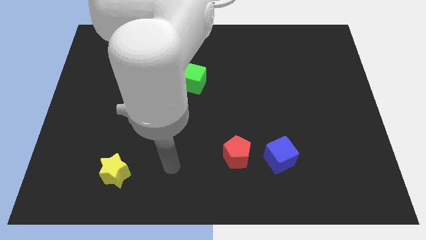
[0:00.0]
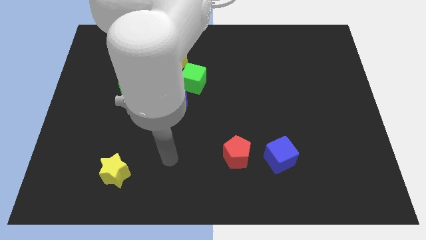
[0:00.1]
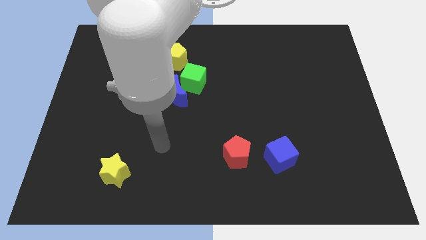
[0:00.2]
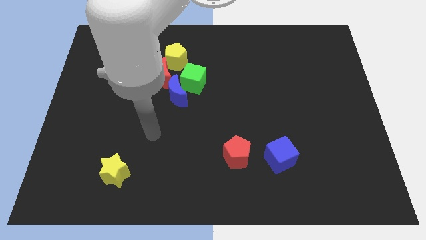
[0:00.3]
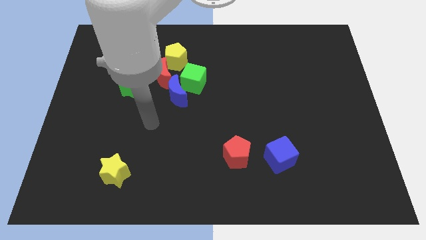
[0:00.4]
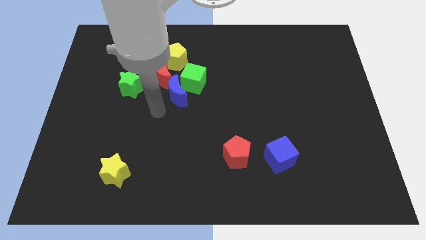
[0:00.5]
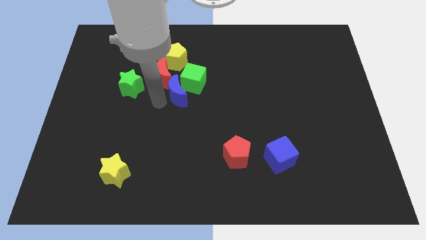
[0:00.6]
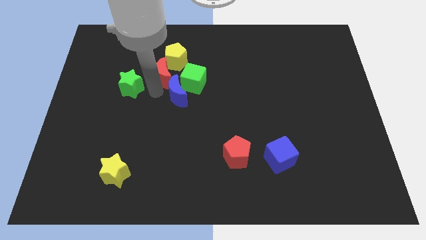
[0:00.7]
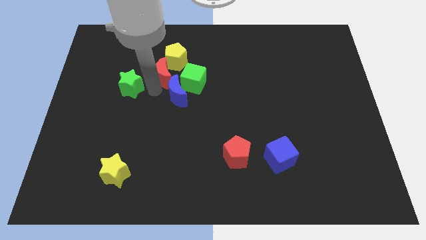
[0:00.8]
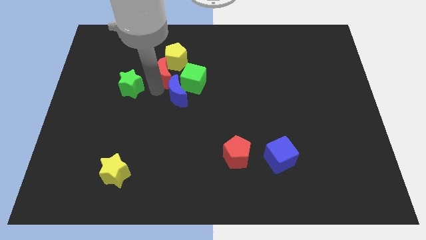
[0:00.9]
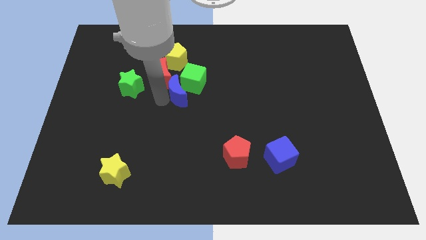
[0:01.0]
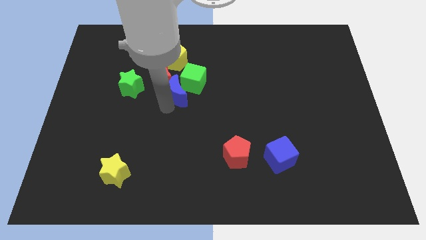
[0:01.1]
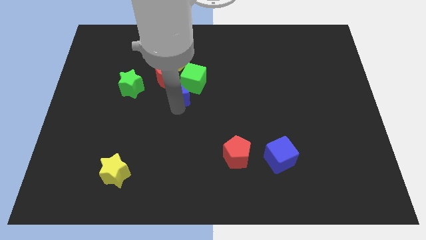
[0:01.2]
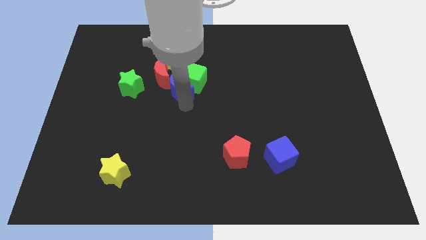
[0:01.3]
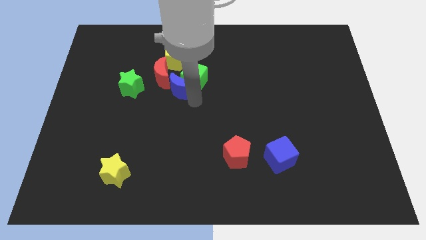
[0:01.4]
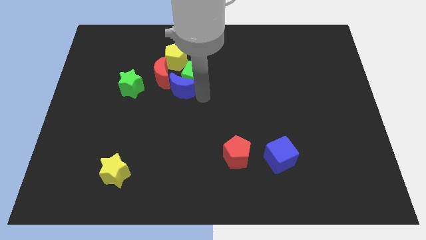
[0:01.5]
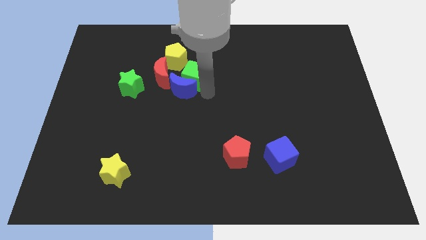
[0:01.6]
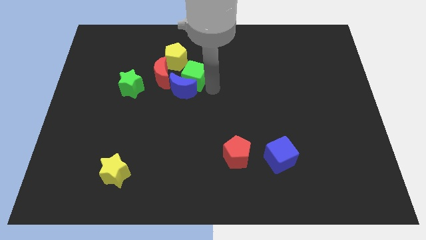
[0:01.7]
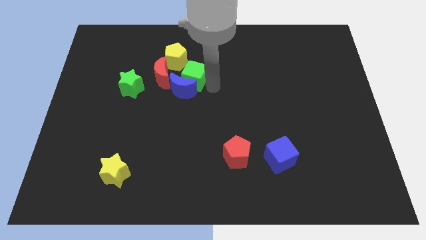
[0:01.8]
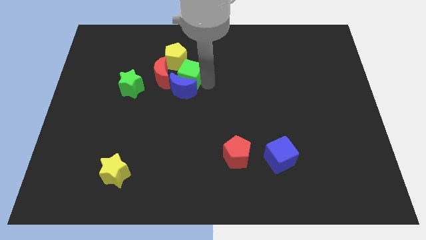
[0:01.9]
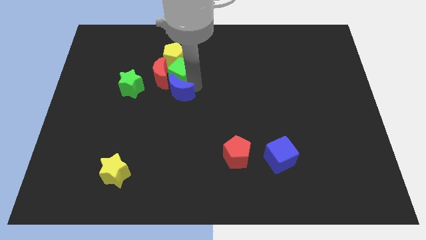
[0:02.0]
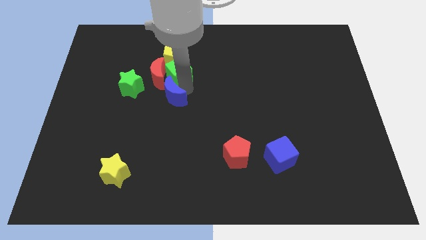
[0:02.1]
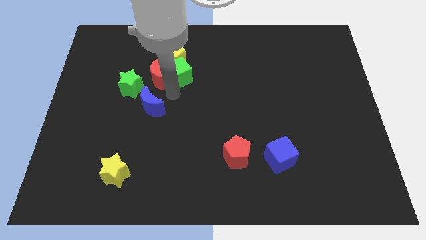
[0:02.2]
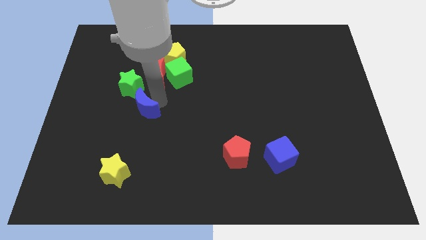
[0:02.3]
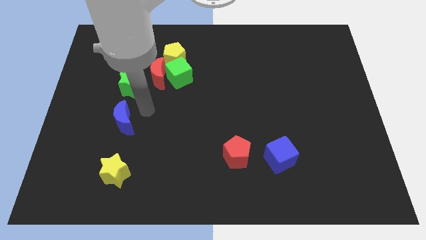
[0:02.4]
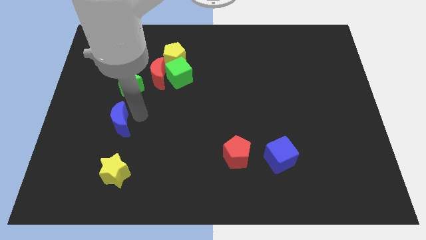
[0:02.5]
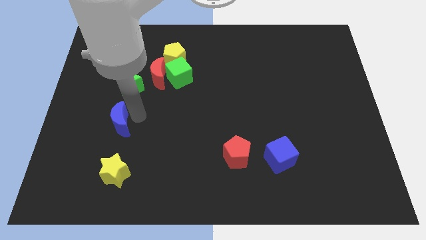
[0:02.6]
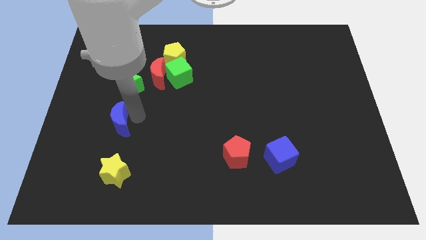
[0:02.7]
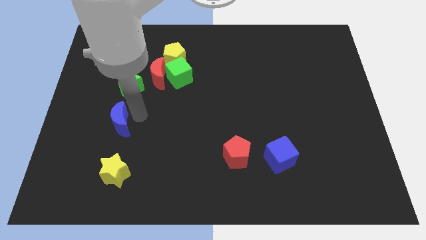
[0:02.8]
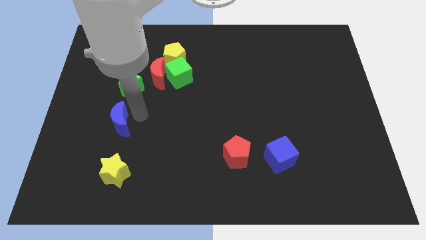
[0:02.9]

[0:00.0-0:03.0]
move blue moon between green star and yellow star

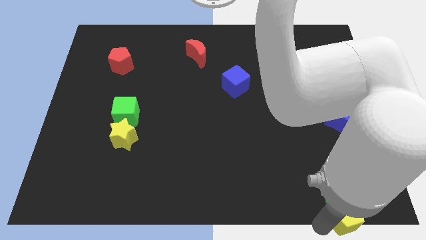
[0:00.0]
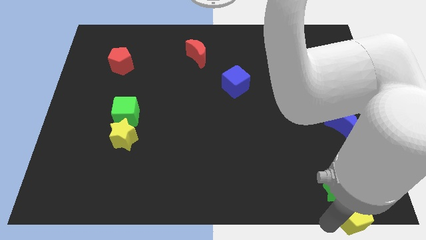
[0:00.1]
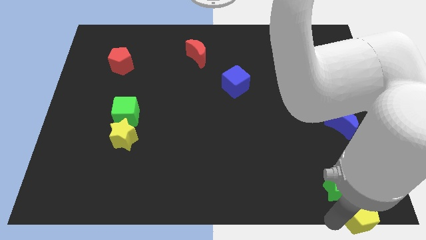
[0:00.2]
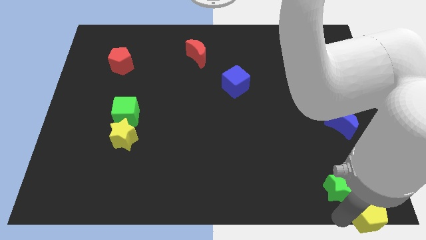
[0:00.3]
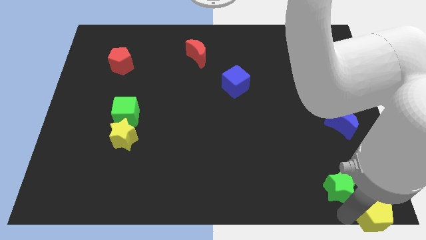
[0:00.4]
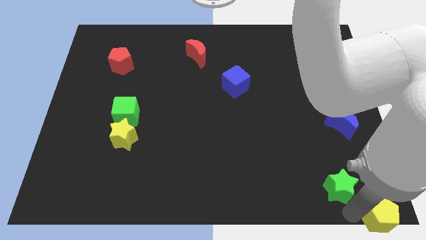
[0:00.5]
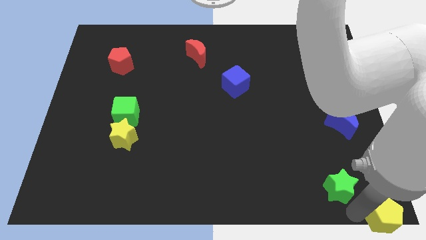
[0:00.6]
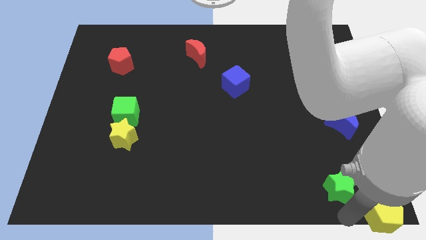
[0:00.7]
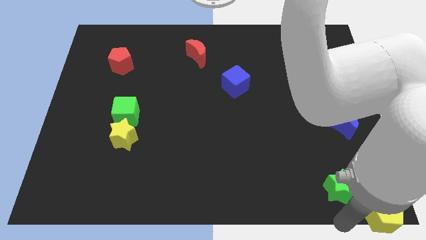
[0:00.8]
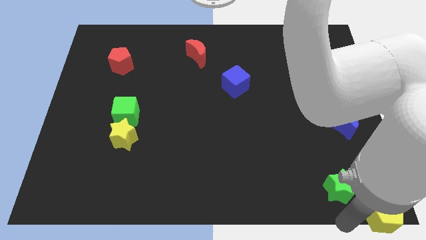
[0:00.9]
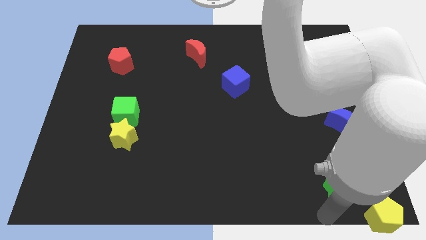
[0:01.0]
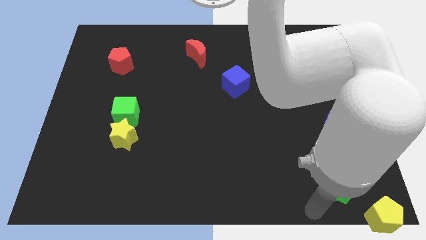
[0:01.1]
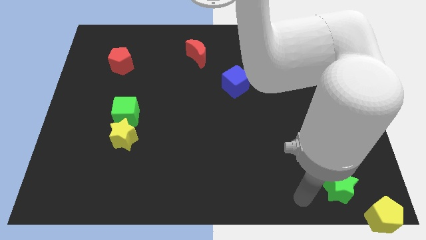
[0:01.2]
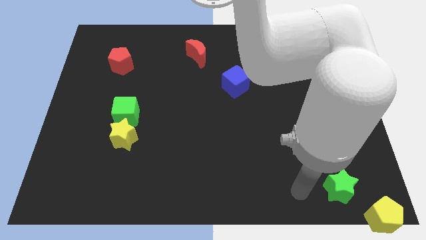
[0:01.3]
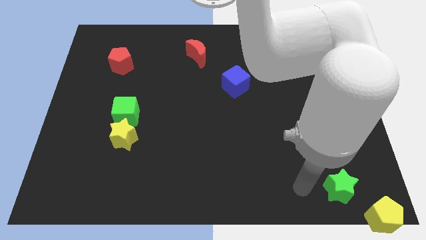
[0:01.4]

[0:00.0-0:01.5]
push yellow pentagon to the bottom right corner of the board

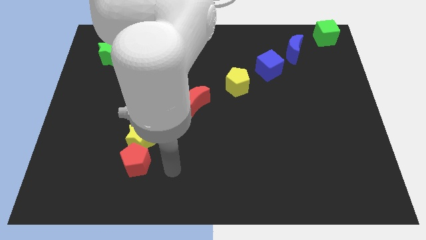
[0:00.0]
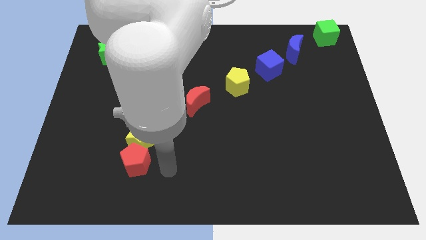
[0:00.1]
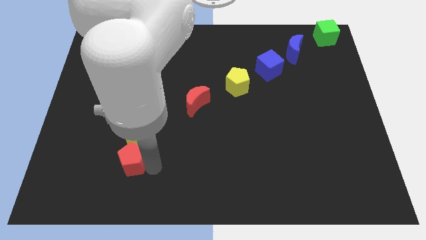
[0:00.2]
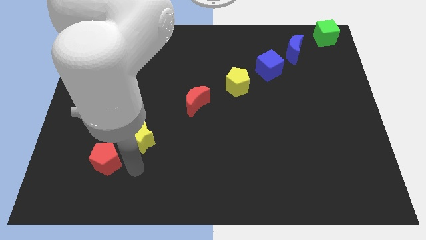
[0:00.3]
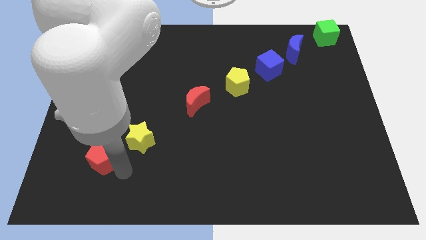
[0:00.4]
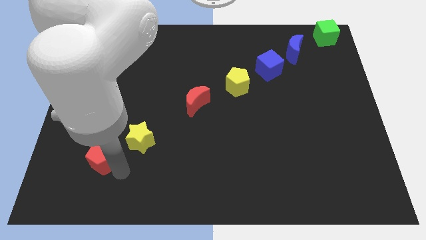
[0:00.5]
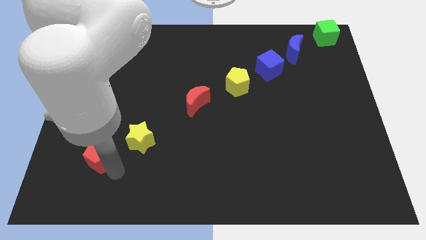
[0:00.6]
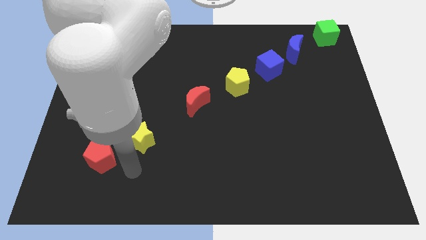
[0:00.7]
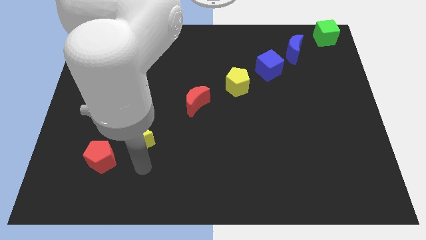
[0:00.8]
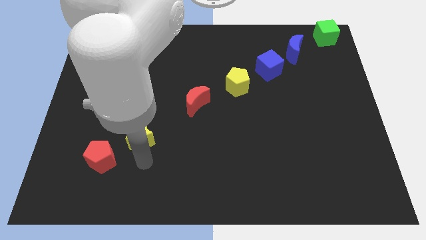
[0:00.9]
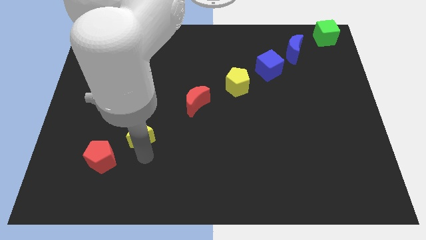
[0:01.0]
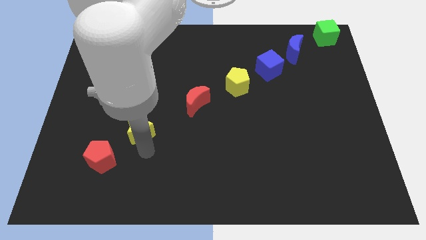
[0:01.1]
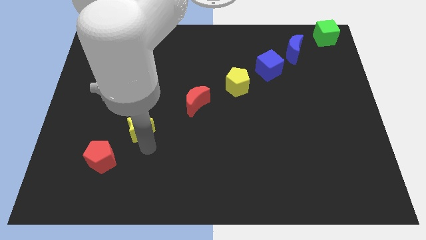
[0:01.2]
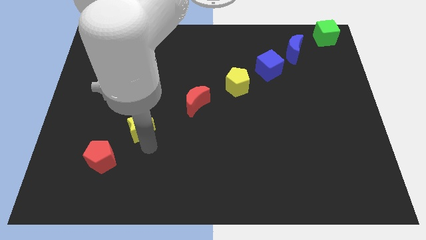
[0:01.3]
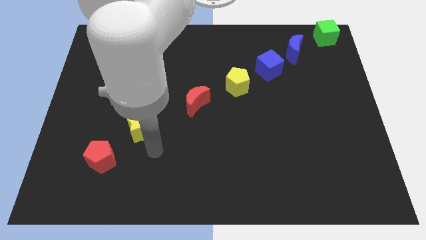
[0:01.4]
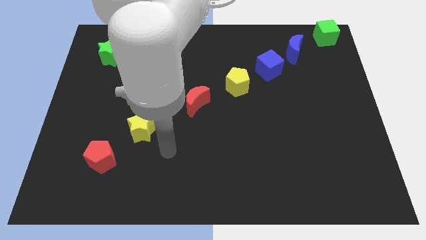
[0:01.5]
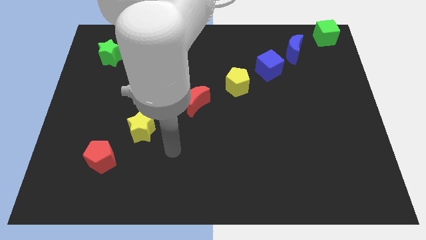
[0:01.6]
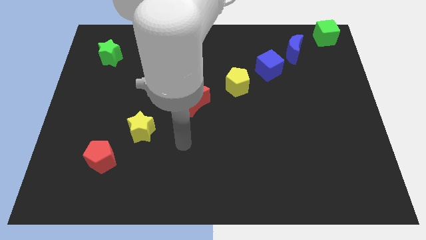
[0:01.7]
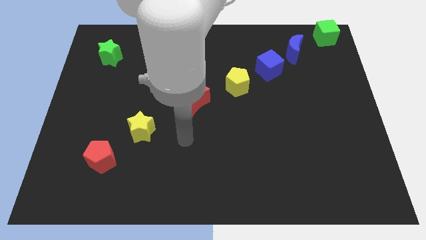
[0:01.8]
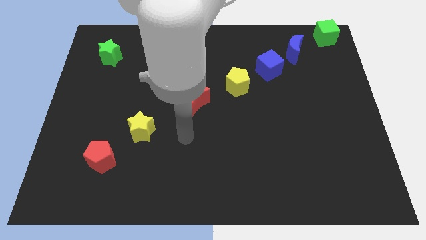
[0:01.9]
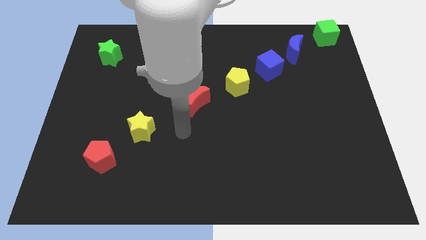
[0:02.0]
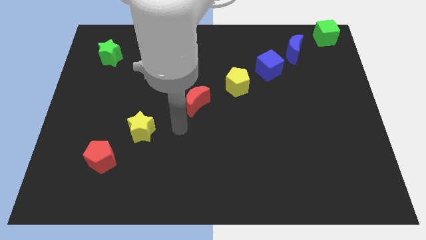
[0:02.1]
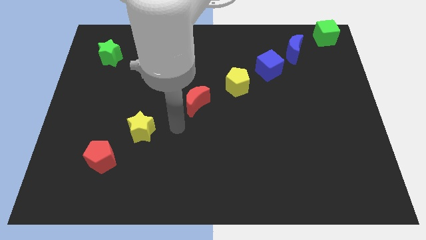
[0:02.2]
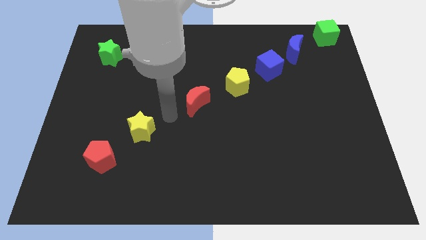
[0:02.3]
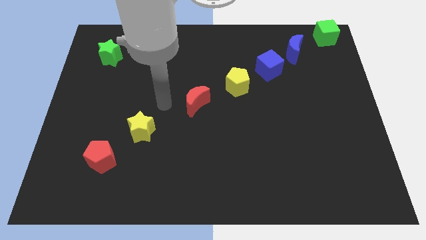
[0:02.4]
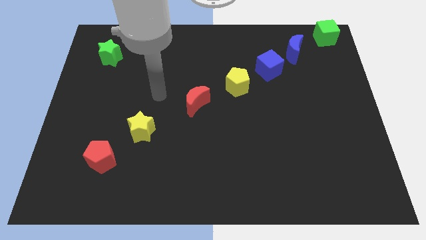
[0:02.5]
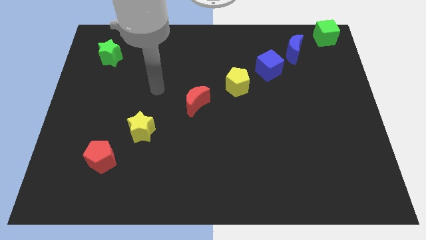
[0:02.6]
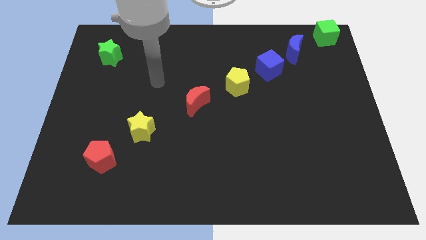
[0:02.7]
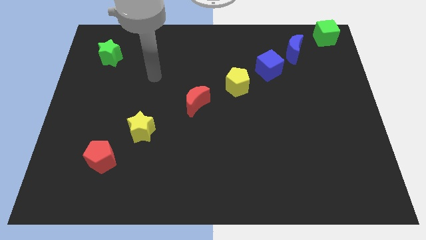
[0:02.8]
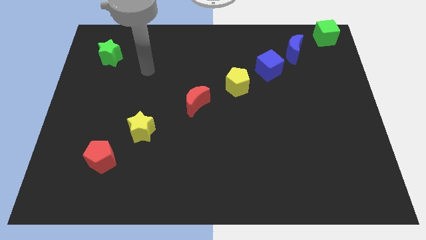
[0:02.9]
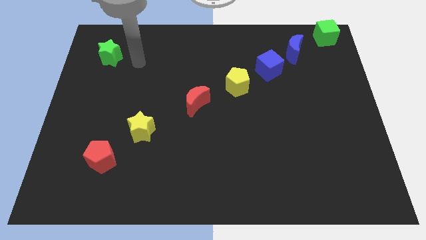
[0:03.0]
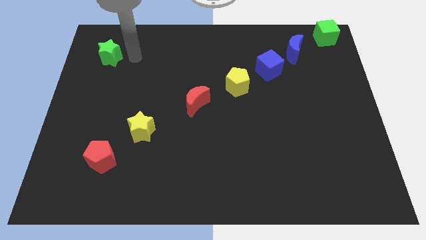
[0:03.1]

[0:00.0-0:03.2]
put the yellow star and red pentagon diagonally on the bottom left side of the red crescent

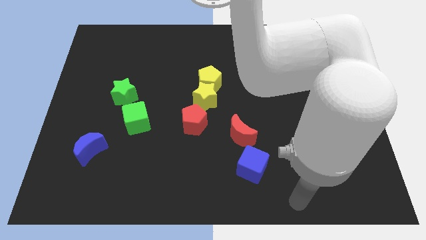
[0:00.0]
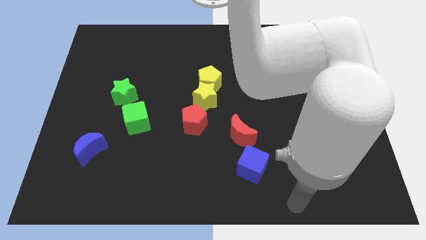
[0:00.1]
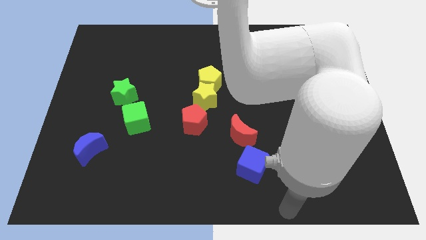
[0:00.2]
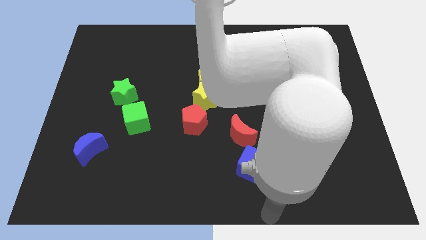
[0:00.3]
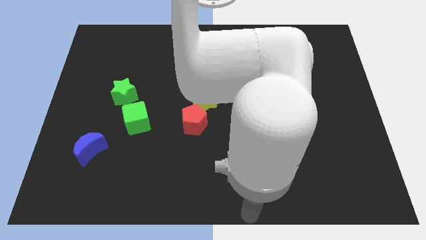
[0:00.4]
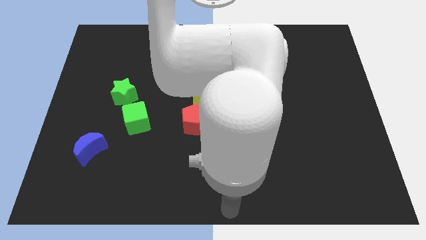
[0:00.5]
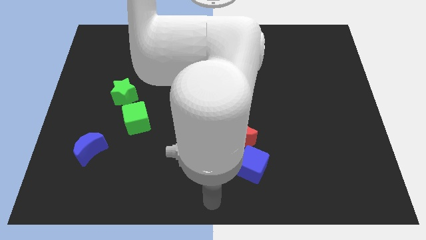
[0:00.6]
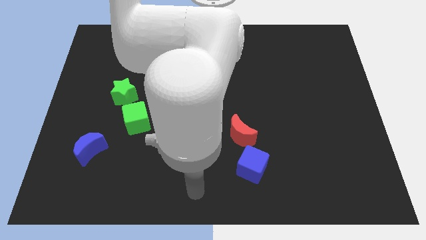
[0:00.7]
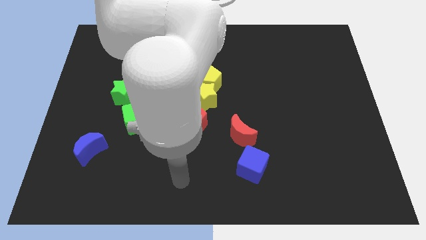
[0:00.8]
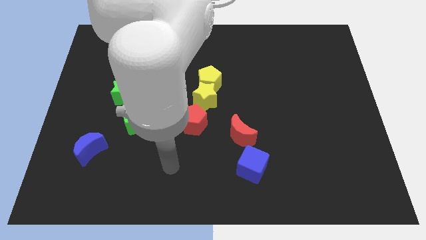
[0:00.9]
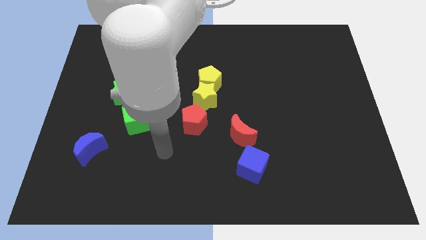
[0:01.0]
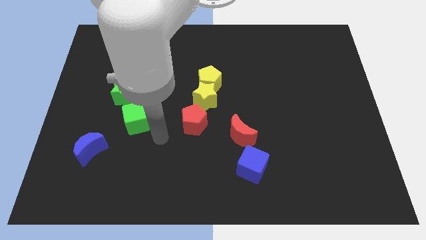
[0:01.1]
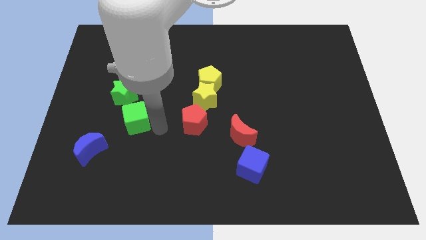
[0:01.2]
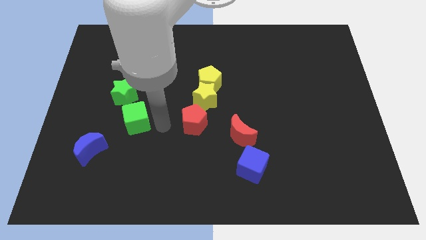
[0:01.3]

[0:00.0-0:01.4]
place your arm at the right of green cube

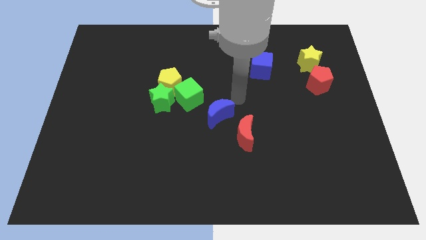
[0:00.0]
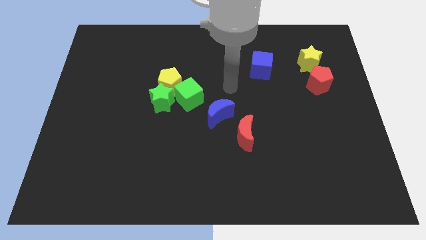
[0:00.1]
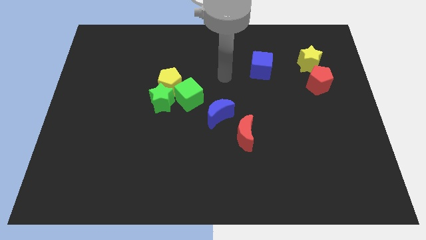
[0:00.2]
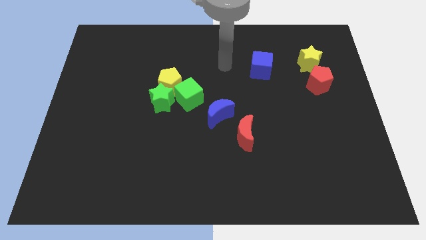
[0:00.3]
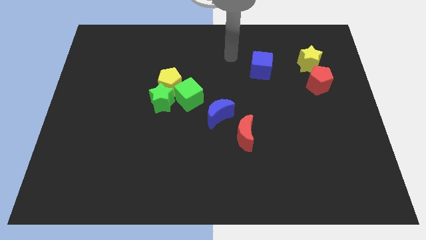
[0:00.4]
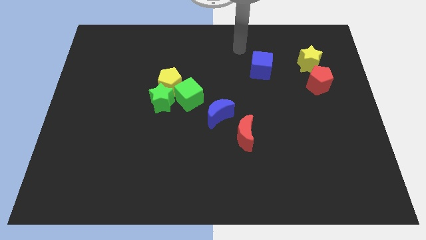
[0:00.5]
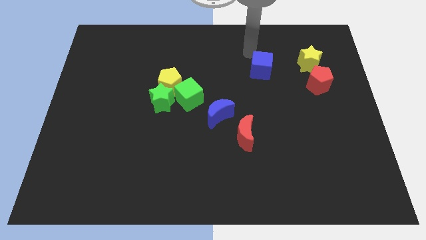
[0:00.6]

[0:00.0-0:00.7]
place the arm on the top of the blue cube
